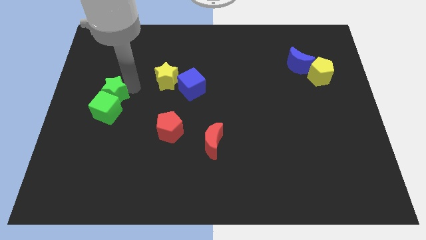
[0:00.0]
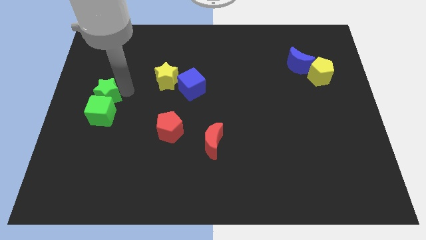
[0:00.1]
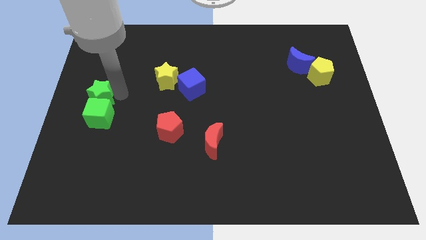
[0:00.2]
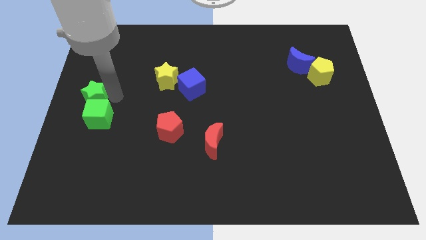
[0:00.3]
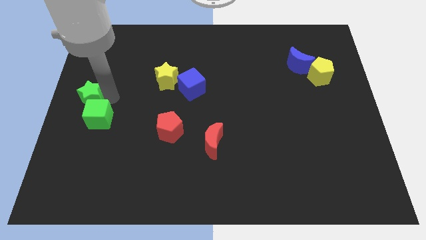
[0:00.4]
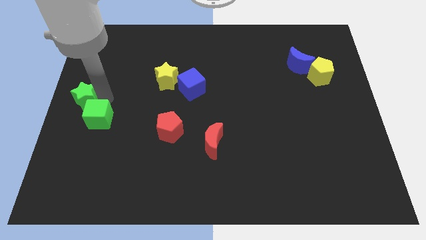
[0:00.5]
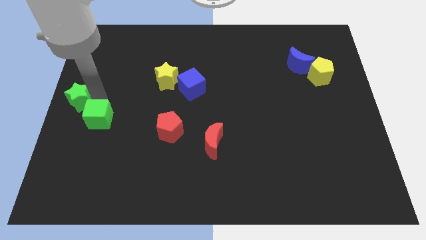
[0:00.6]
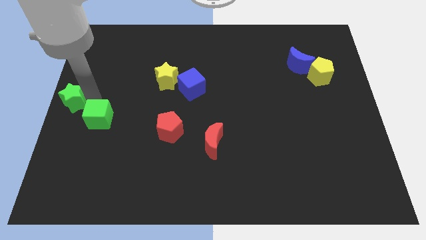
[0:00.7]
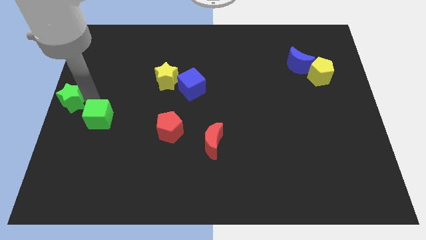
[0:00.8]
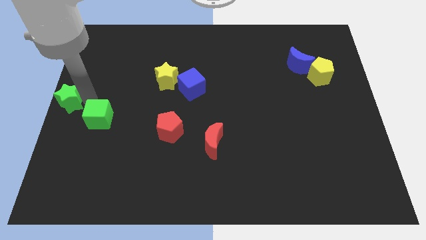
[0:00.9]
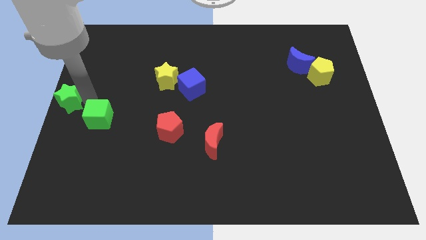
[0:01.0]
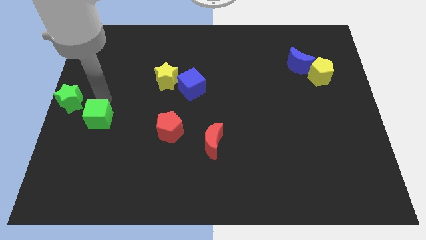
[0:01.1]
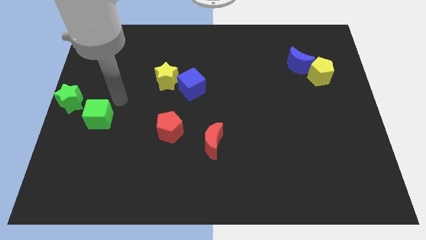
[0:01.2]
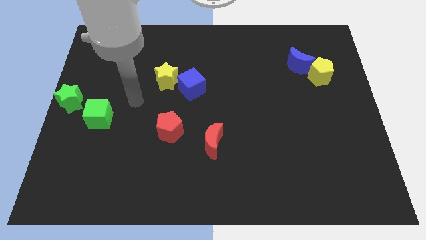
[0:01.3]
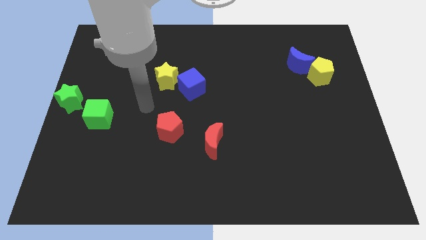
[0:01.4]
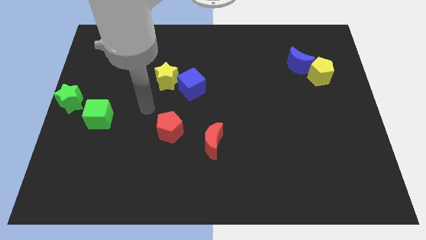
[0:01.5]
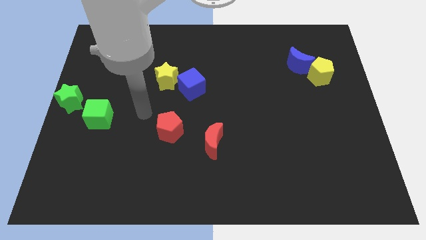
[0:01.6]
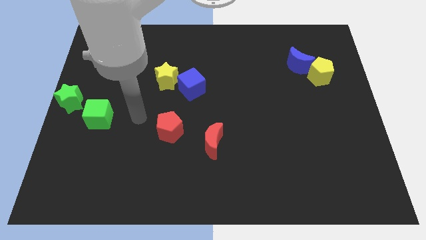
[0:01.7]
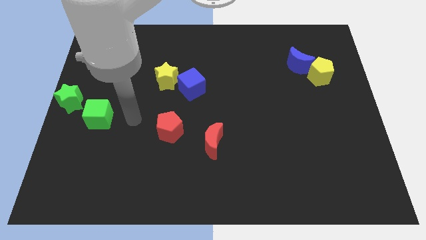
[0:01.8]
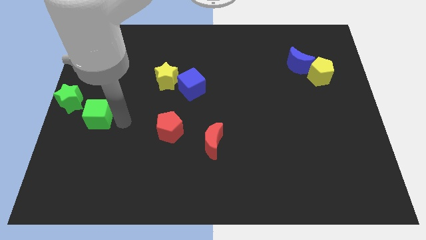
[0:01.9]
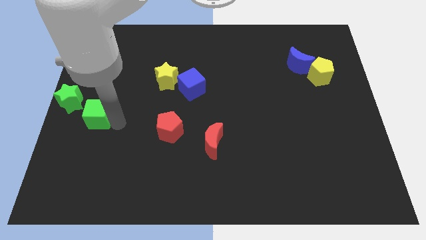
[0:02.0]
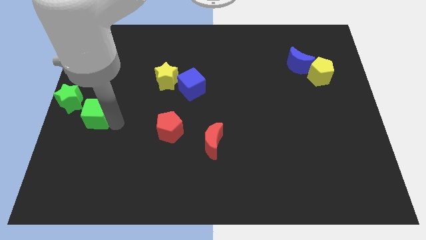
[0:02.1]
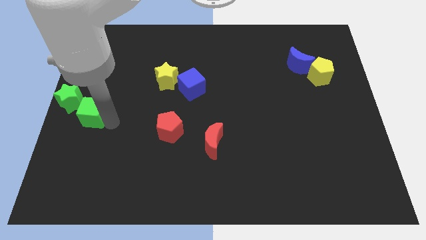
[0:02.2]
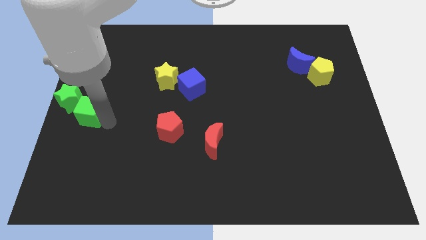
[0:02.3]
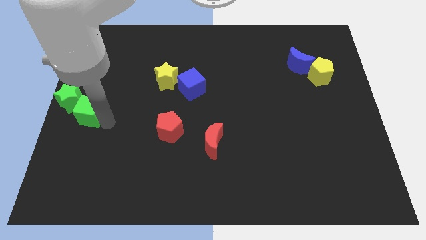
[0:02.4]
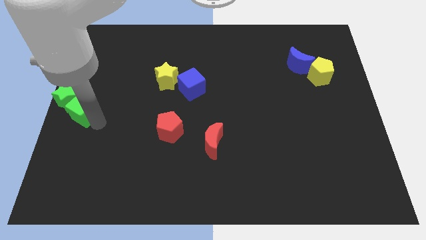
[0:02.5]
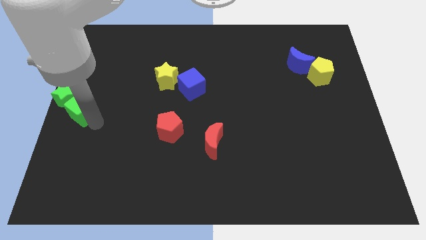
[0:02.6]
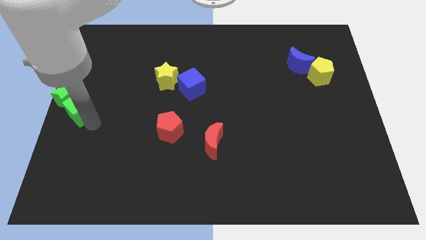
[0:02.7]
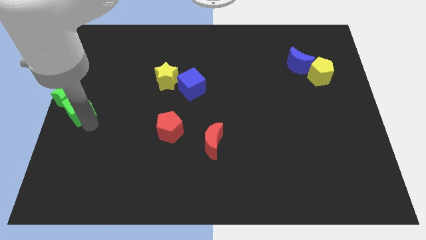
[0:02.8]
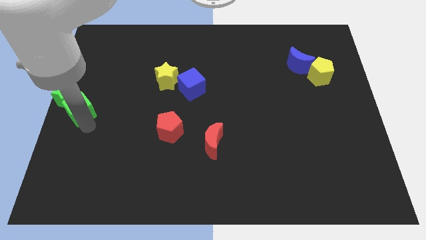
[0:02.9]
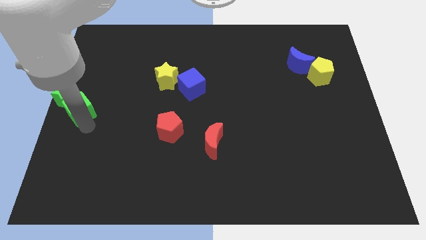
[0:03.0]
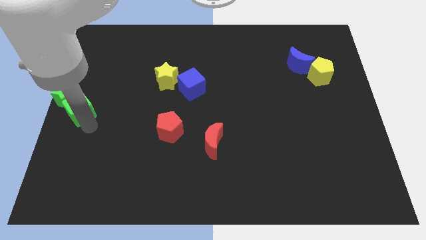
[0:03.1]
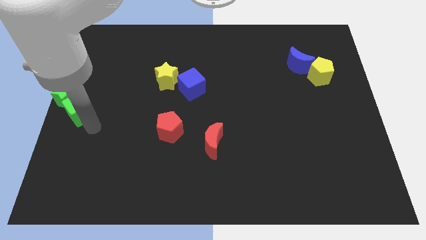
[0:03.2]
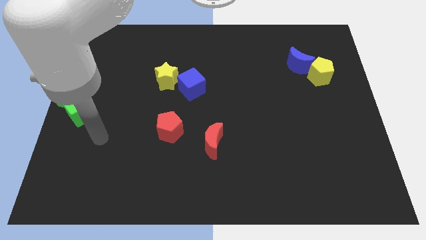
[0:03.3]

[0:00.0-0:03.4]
push the green cube into the green star

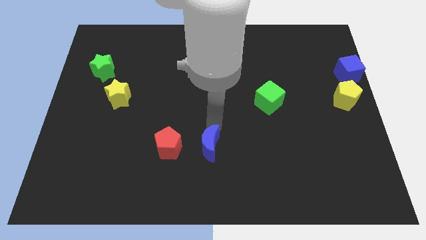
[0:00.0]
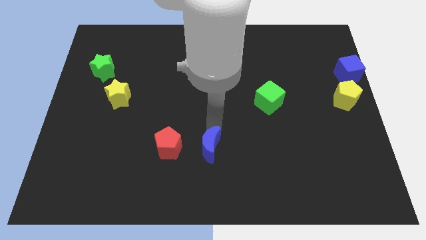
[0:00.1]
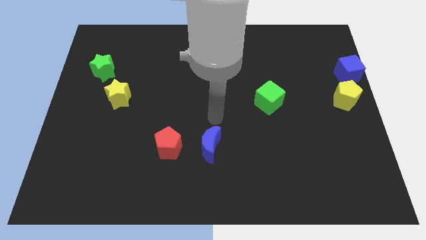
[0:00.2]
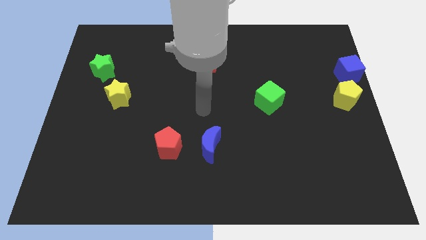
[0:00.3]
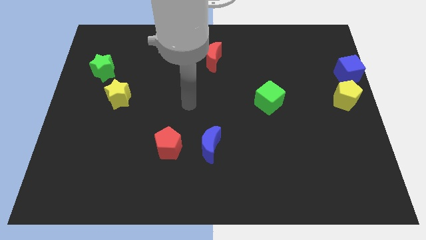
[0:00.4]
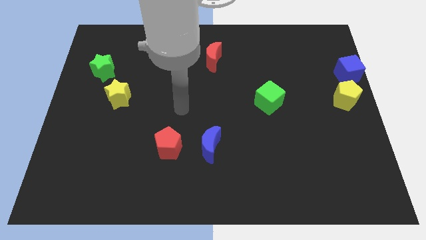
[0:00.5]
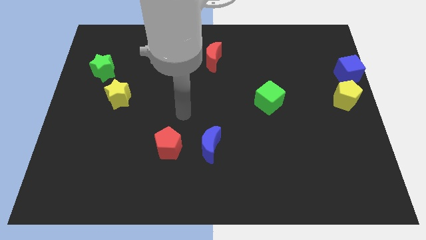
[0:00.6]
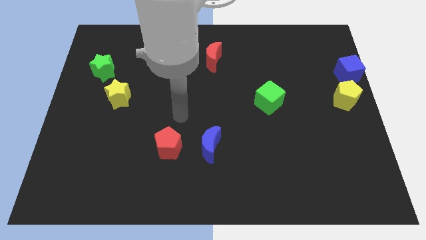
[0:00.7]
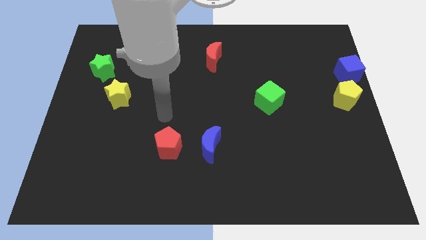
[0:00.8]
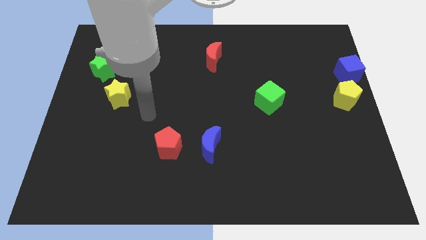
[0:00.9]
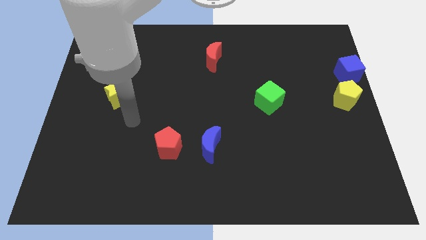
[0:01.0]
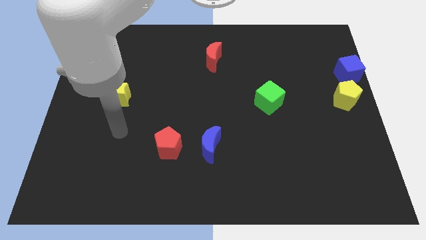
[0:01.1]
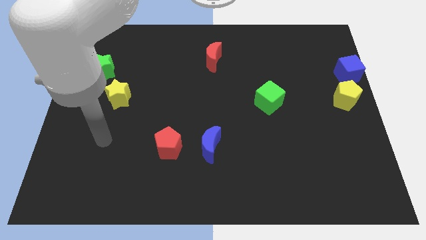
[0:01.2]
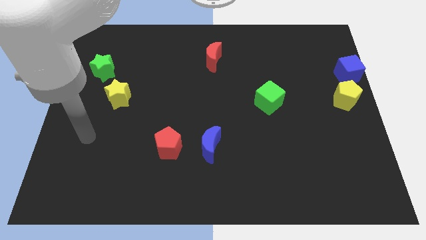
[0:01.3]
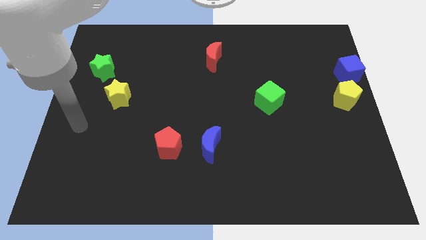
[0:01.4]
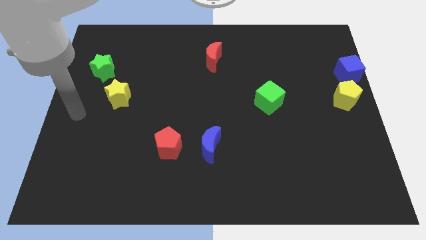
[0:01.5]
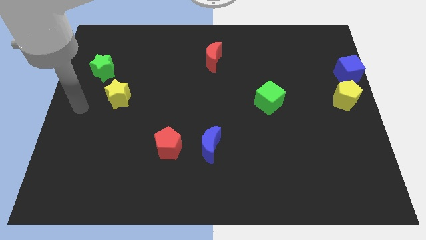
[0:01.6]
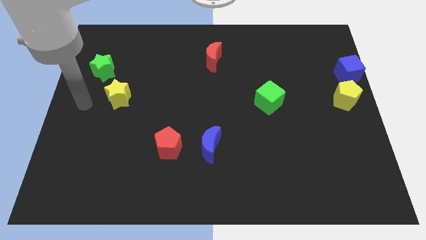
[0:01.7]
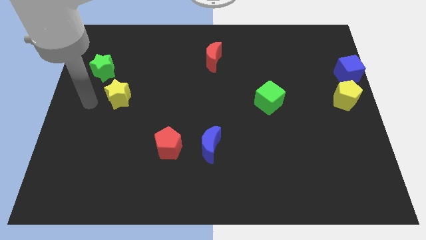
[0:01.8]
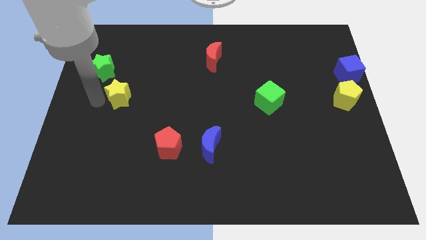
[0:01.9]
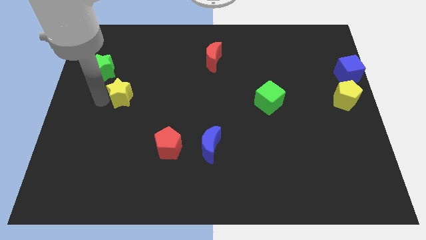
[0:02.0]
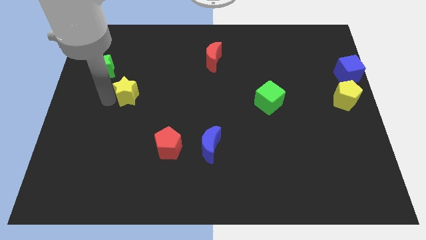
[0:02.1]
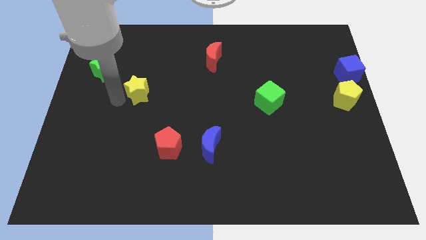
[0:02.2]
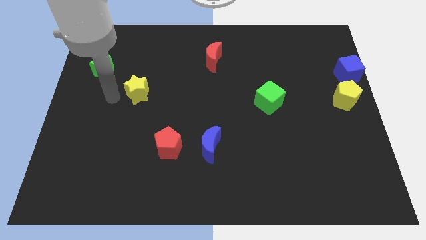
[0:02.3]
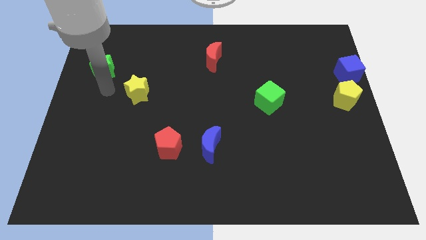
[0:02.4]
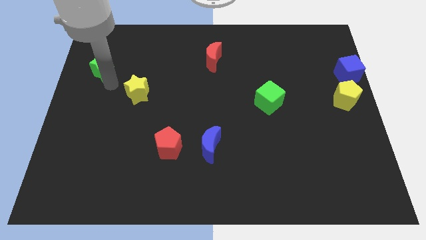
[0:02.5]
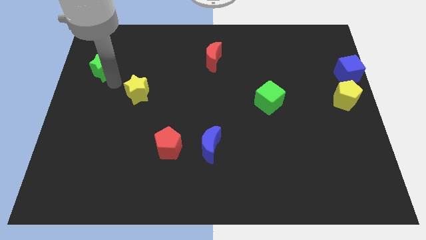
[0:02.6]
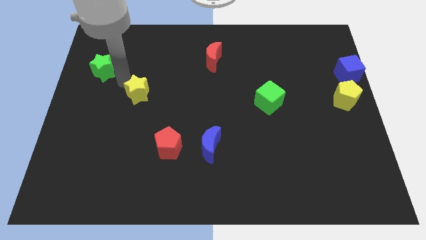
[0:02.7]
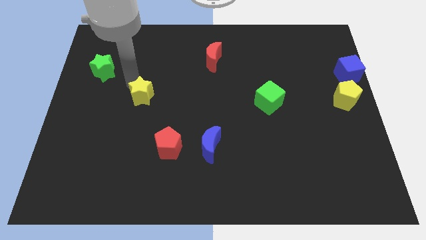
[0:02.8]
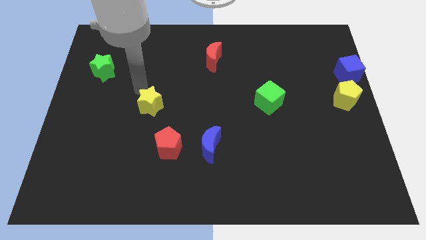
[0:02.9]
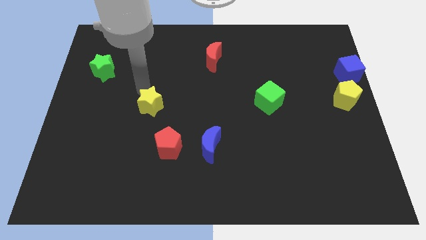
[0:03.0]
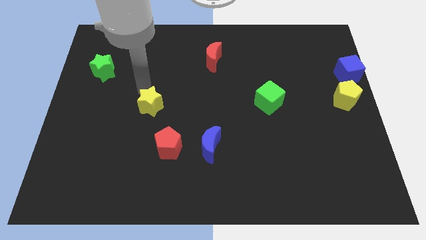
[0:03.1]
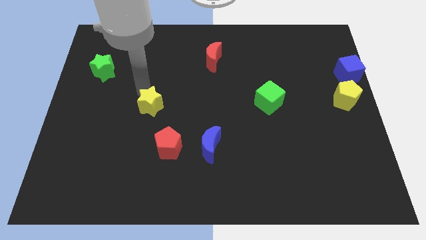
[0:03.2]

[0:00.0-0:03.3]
push the yellow star to the top of the red pentagon

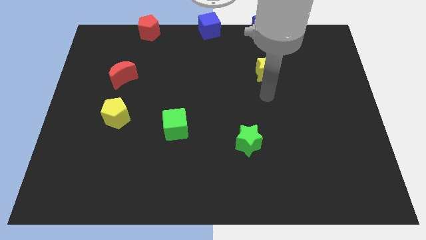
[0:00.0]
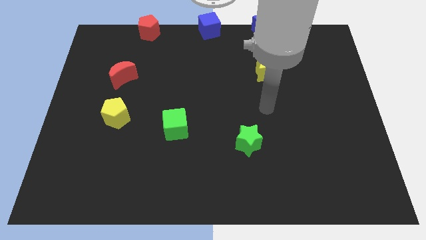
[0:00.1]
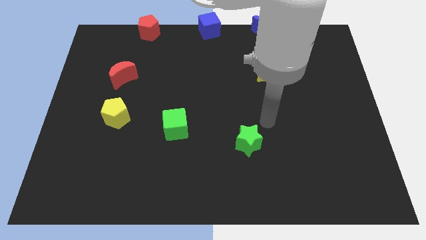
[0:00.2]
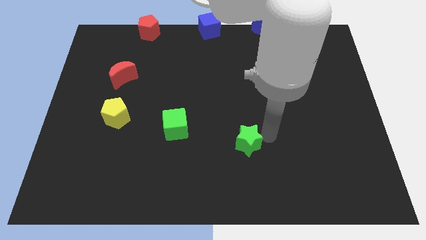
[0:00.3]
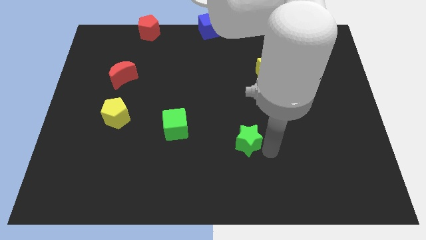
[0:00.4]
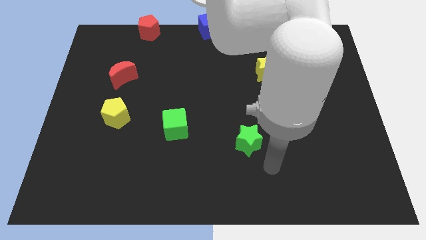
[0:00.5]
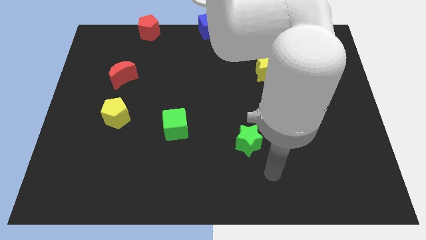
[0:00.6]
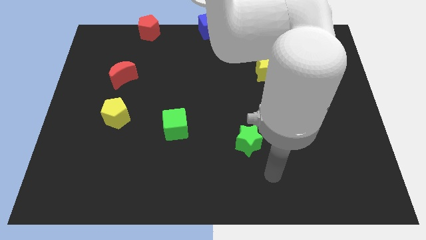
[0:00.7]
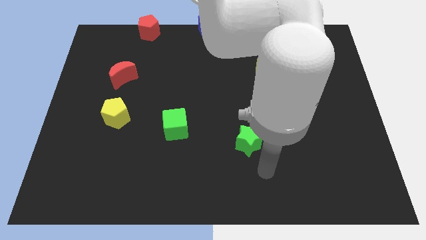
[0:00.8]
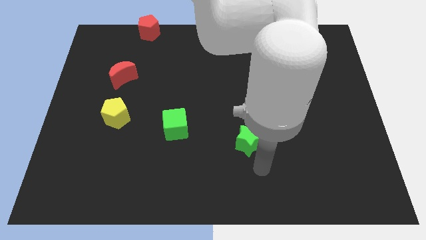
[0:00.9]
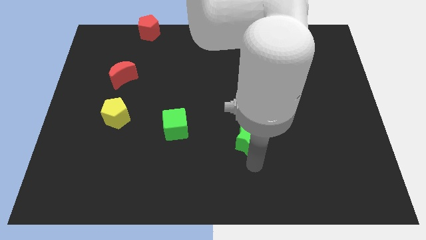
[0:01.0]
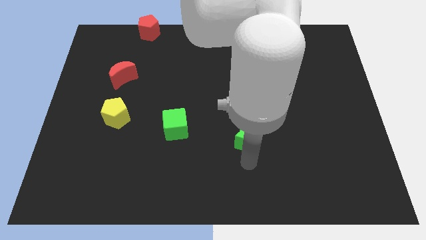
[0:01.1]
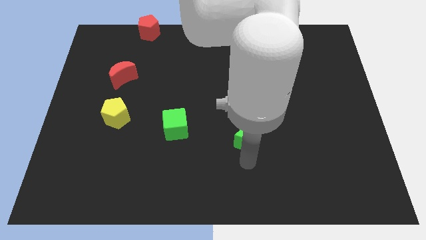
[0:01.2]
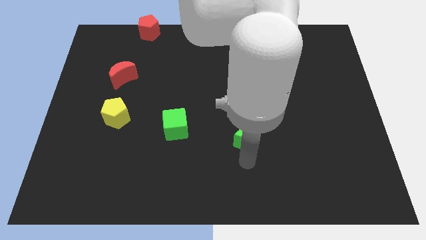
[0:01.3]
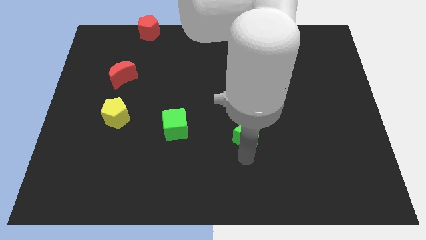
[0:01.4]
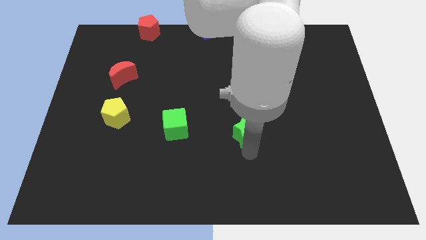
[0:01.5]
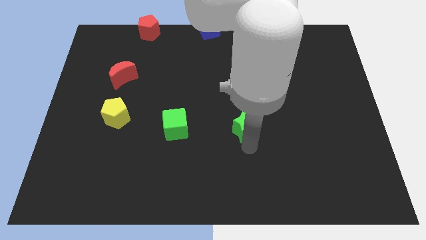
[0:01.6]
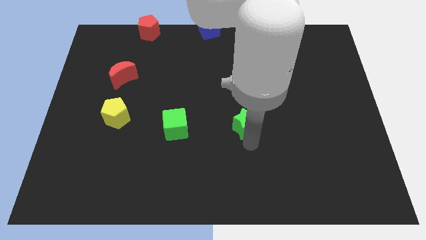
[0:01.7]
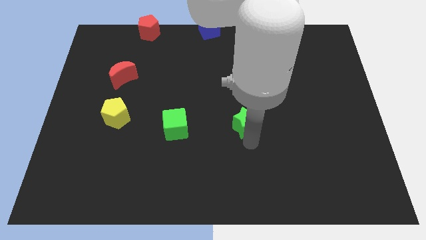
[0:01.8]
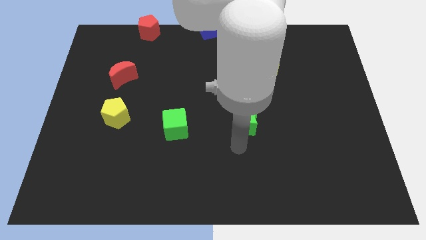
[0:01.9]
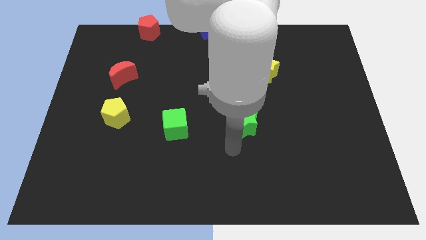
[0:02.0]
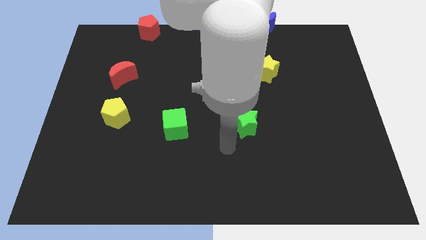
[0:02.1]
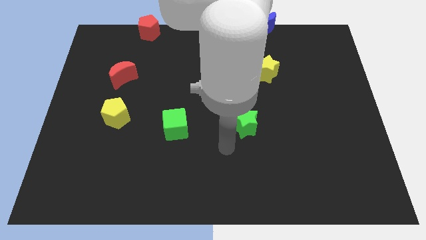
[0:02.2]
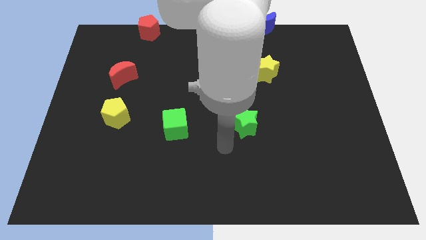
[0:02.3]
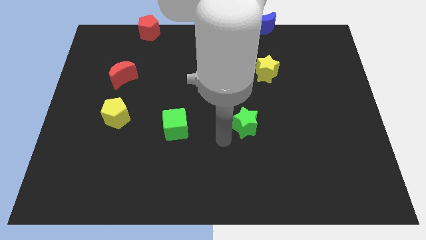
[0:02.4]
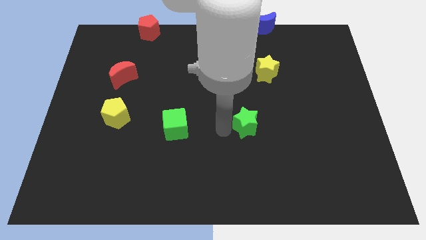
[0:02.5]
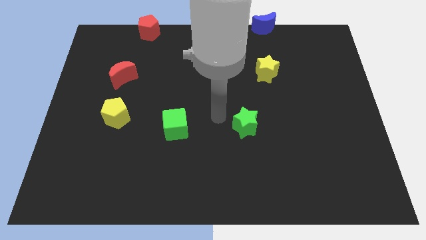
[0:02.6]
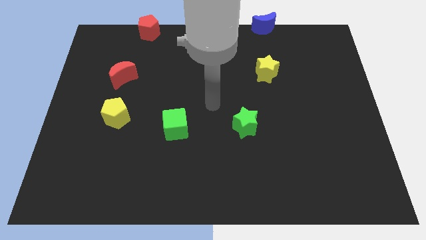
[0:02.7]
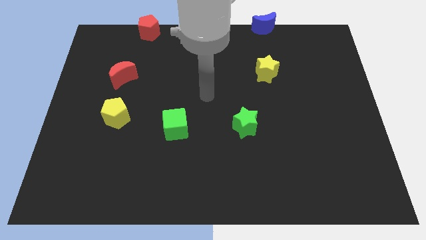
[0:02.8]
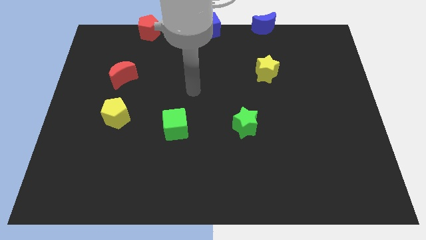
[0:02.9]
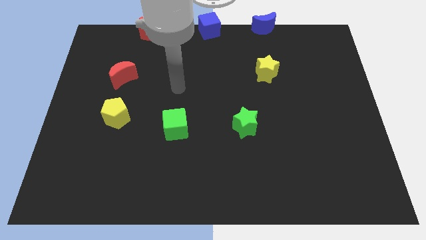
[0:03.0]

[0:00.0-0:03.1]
push the green star to the right of green cube
